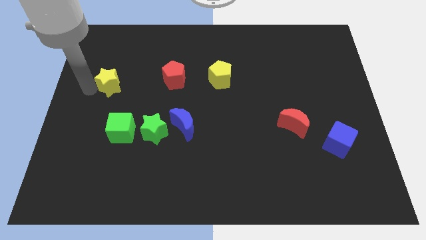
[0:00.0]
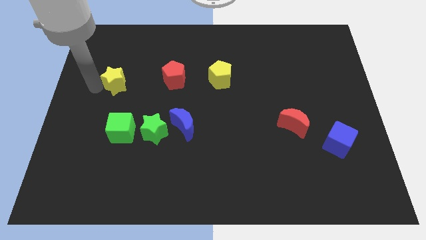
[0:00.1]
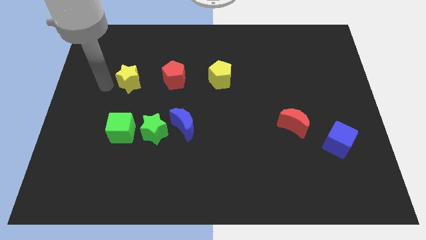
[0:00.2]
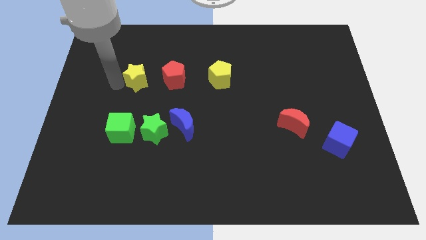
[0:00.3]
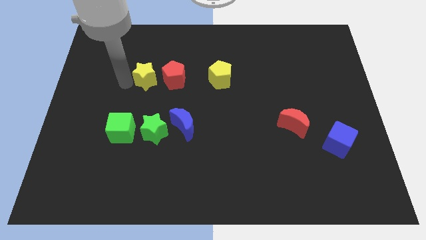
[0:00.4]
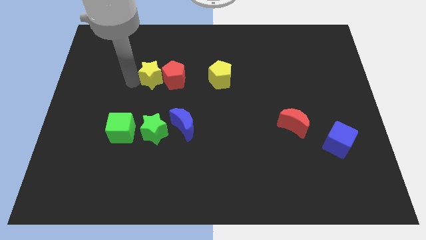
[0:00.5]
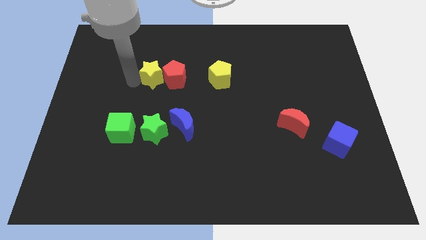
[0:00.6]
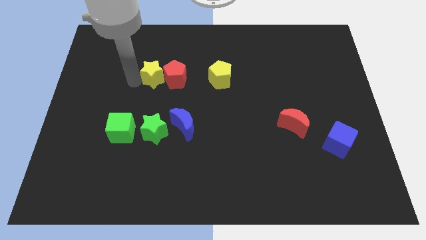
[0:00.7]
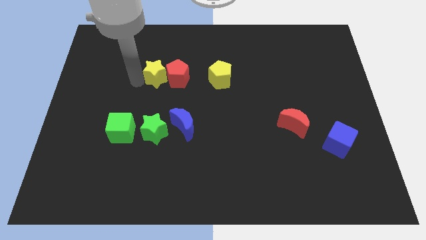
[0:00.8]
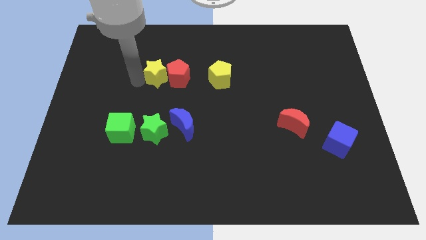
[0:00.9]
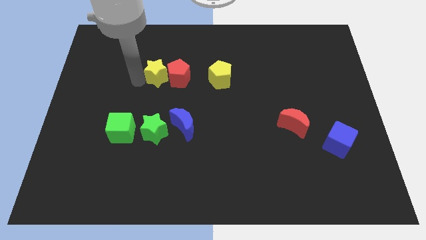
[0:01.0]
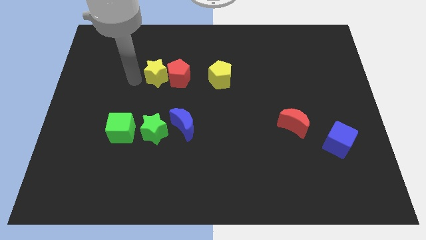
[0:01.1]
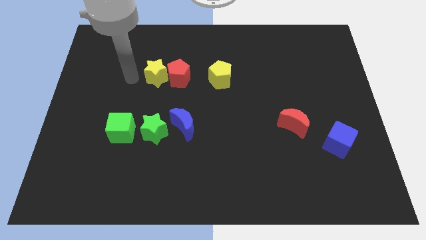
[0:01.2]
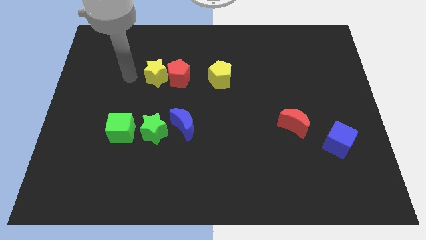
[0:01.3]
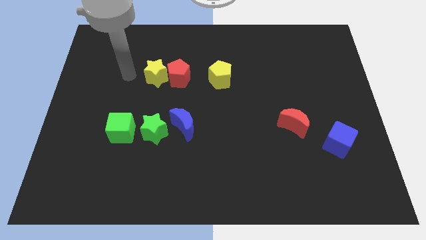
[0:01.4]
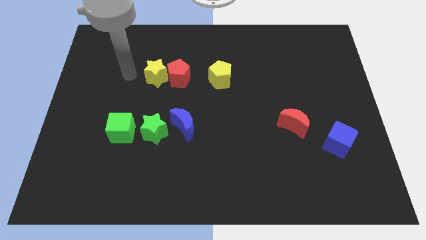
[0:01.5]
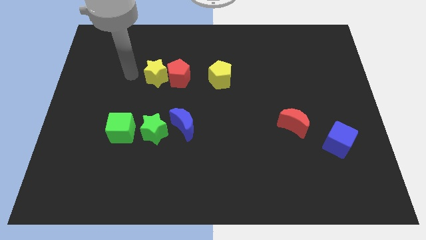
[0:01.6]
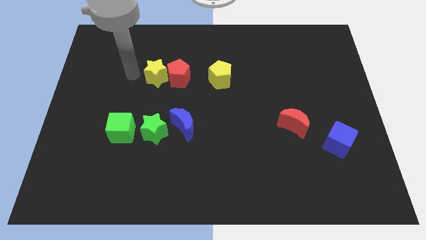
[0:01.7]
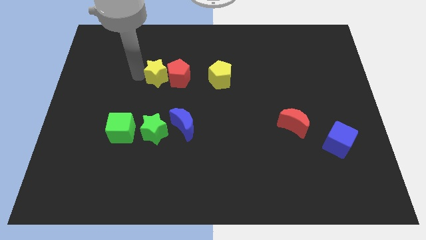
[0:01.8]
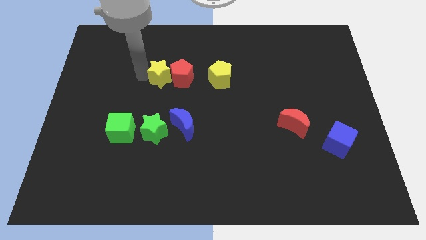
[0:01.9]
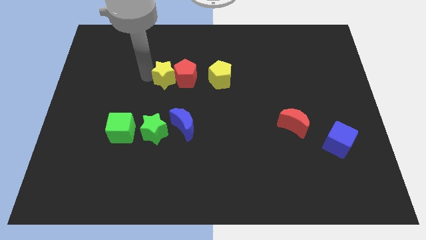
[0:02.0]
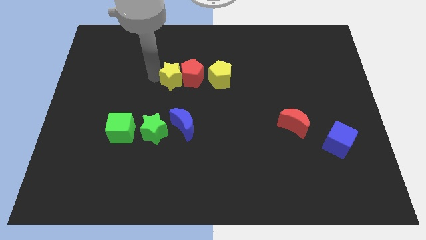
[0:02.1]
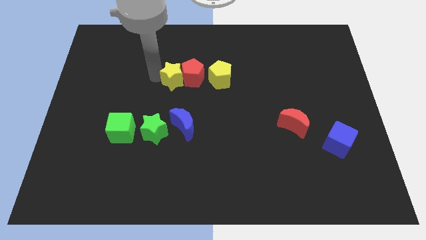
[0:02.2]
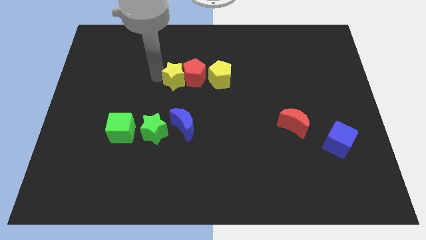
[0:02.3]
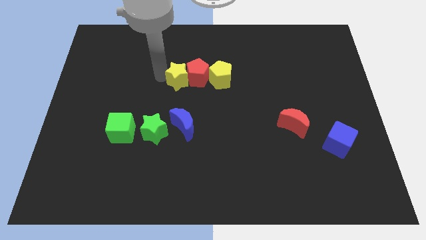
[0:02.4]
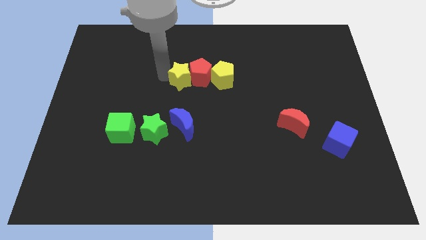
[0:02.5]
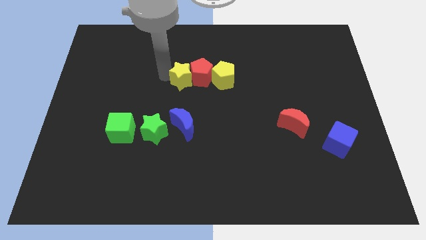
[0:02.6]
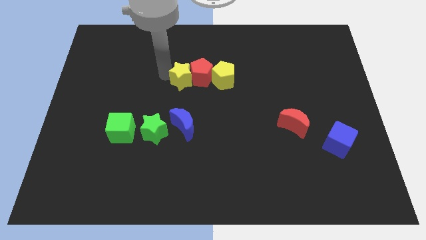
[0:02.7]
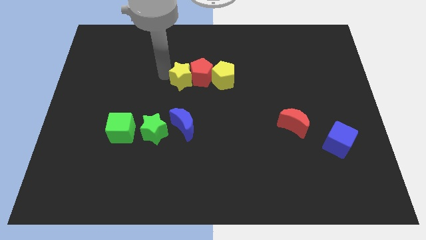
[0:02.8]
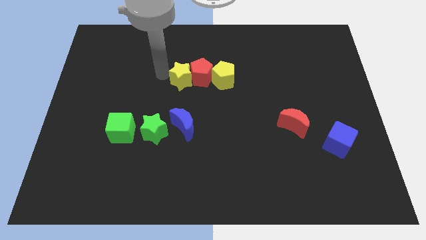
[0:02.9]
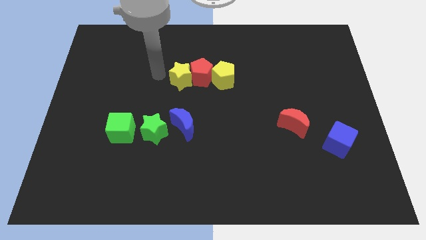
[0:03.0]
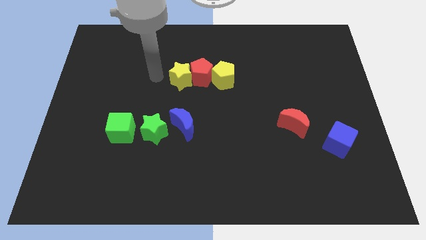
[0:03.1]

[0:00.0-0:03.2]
push the red pentagon towards the center with the help of the yellow star

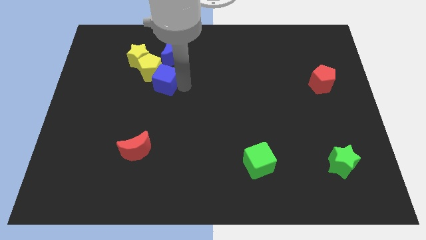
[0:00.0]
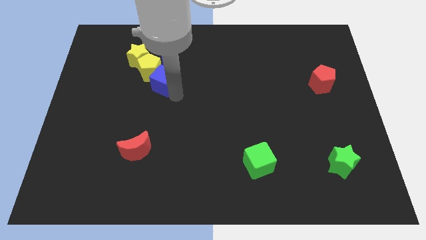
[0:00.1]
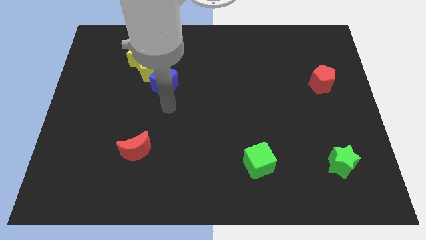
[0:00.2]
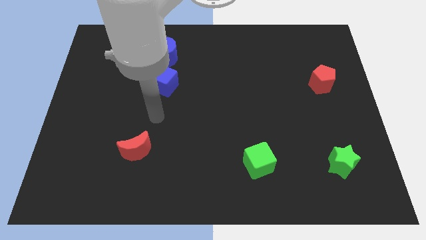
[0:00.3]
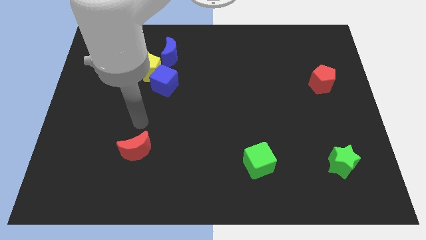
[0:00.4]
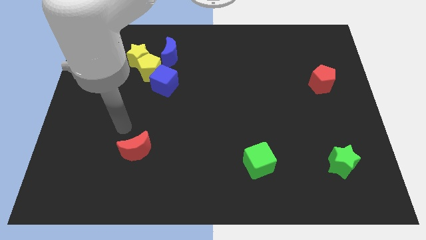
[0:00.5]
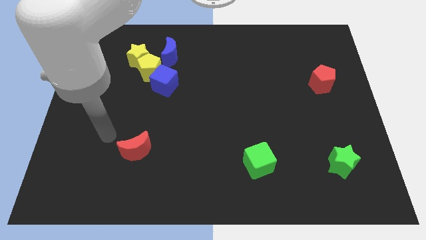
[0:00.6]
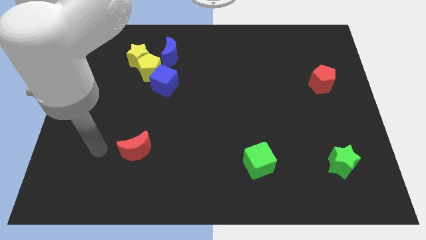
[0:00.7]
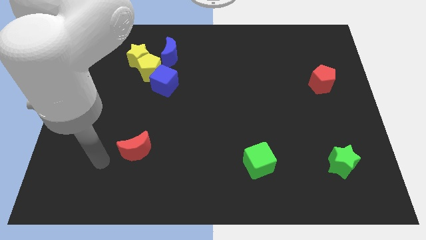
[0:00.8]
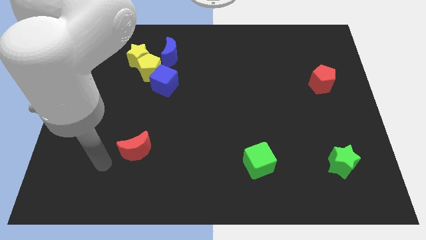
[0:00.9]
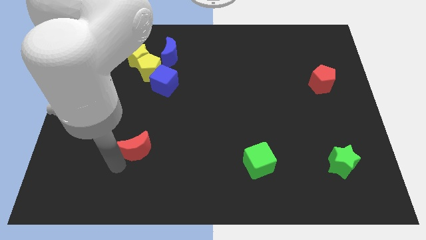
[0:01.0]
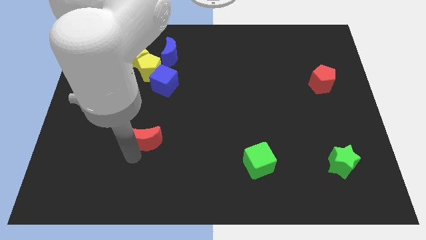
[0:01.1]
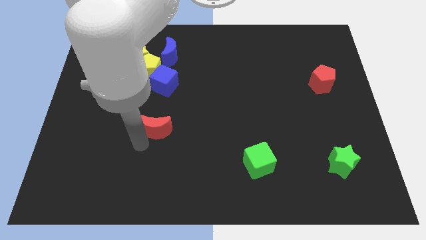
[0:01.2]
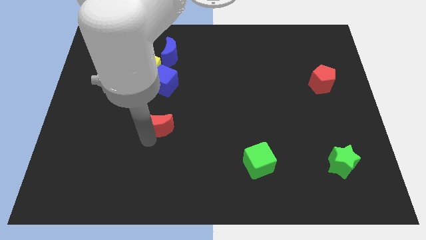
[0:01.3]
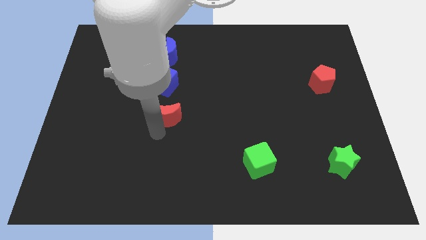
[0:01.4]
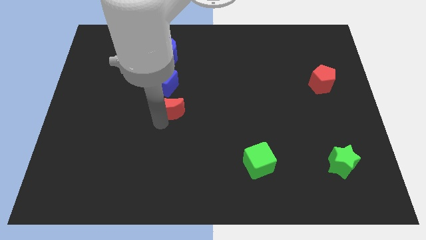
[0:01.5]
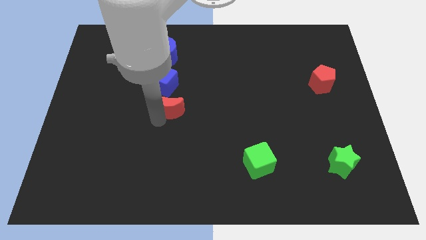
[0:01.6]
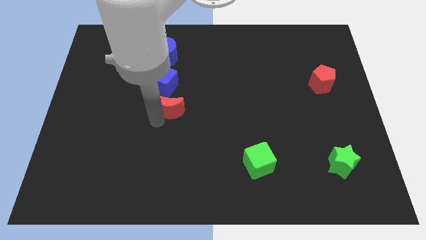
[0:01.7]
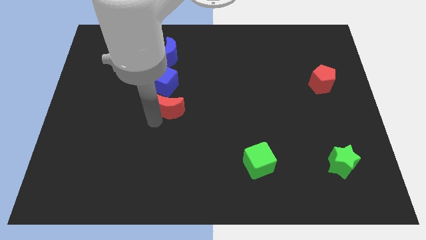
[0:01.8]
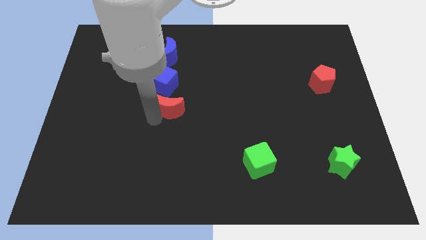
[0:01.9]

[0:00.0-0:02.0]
move the red crescent towards top center

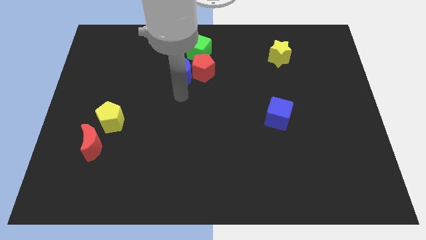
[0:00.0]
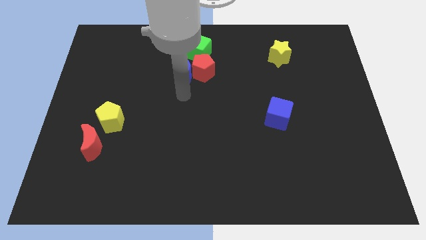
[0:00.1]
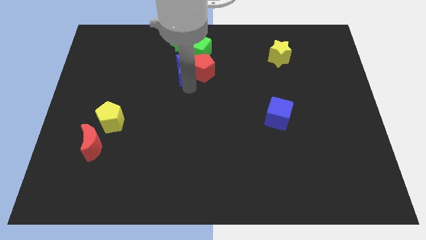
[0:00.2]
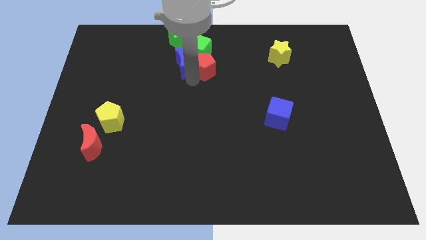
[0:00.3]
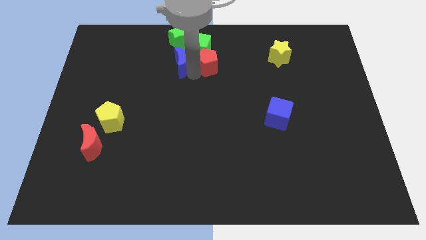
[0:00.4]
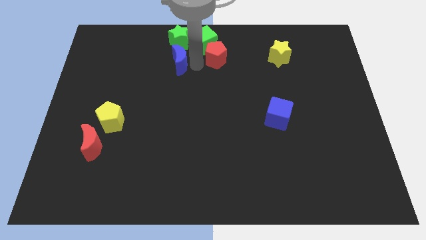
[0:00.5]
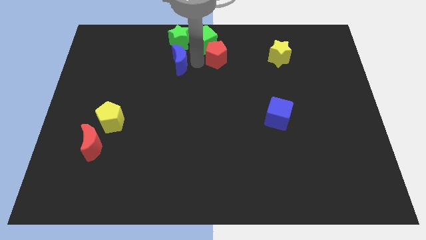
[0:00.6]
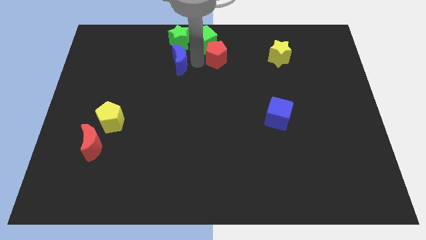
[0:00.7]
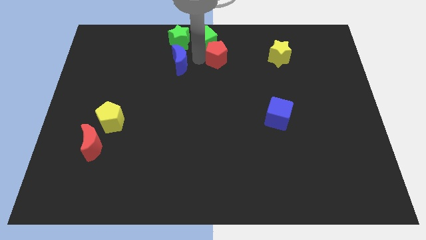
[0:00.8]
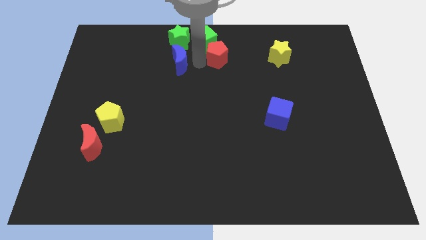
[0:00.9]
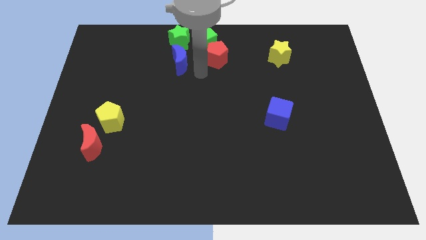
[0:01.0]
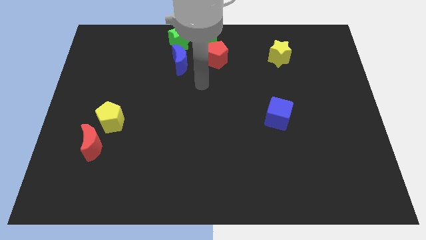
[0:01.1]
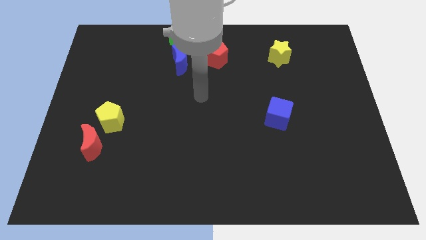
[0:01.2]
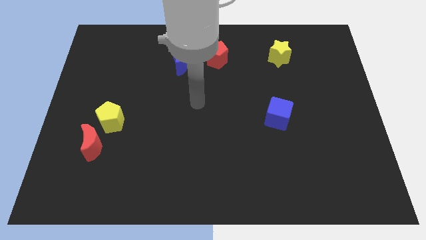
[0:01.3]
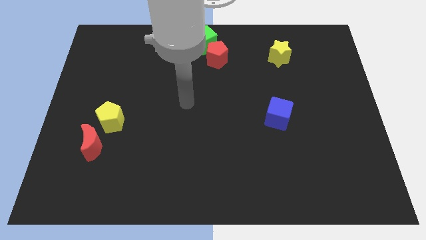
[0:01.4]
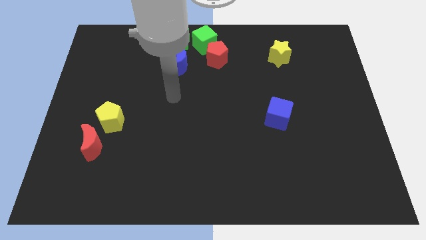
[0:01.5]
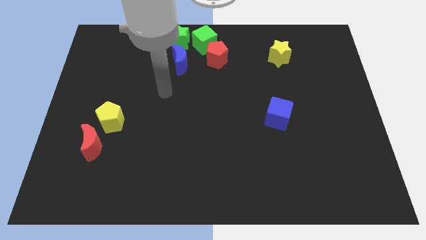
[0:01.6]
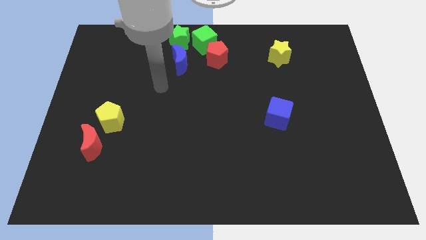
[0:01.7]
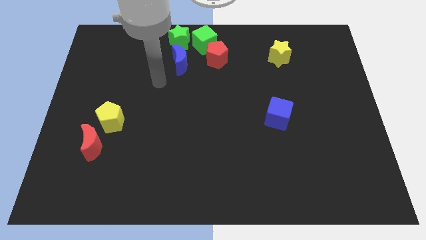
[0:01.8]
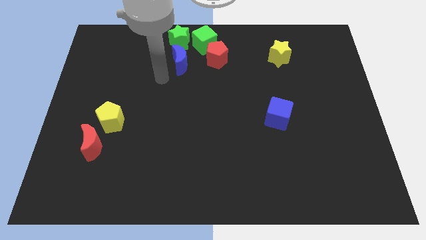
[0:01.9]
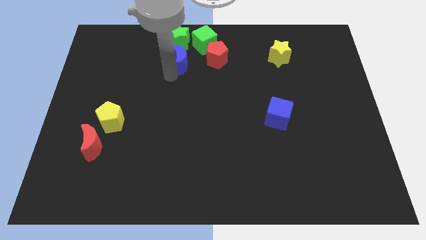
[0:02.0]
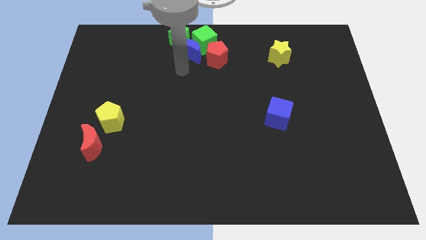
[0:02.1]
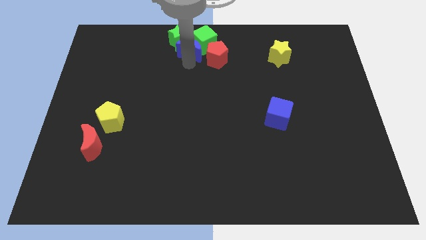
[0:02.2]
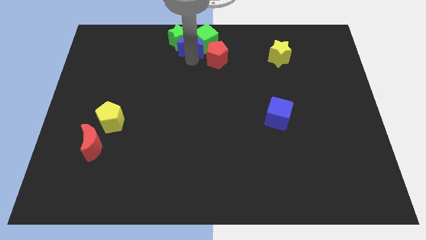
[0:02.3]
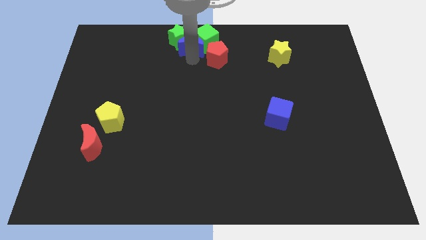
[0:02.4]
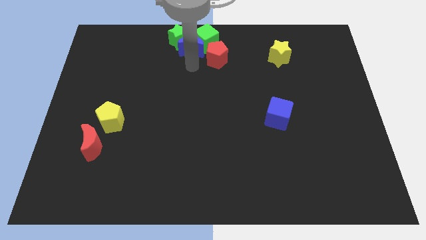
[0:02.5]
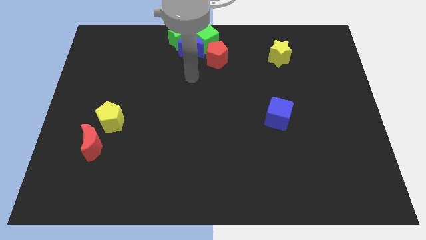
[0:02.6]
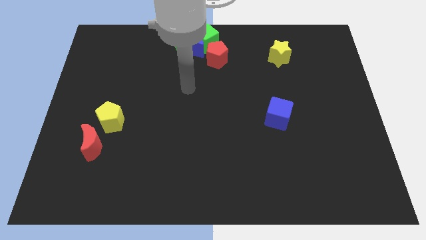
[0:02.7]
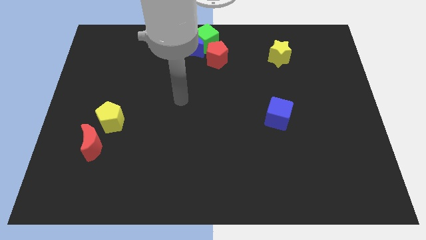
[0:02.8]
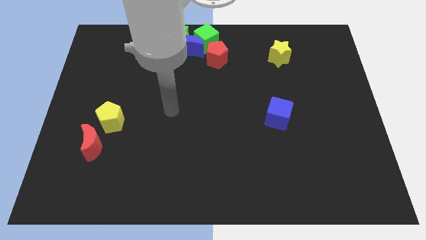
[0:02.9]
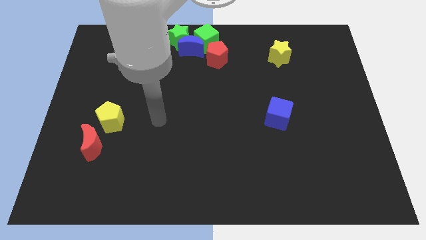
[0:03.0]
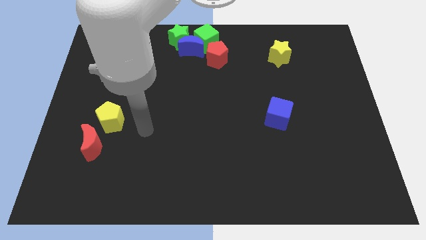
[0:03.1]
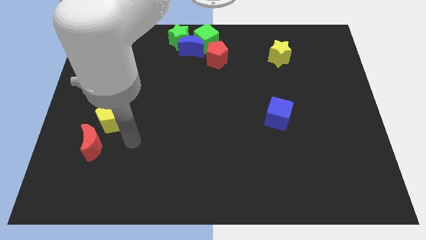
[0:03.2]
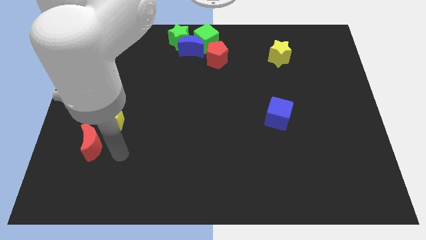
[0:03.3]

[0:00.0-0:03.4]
move both green blocks blue crescent and red pentagon to the top center of the board

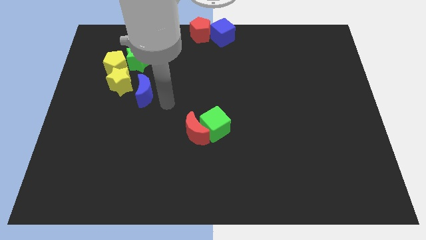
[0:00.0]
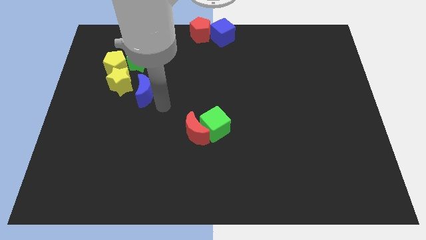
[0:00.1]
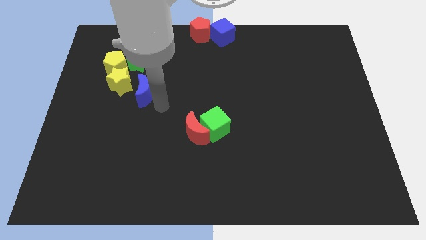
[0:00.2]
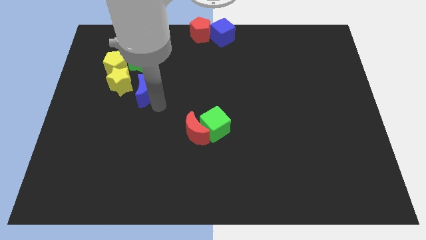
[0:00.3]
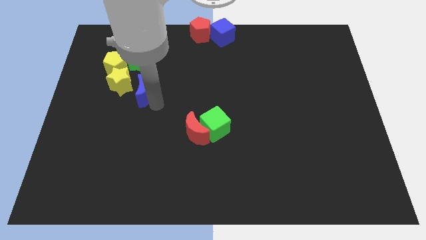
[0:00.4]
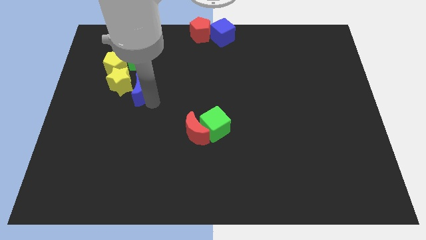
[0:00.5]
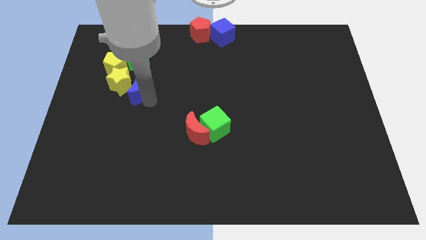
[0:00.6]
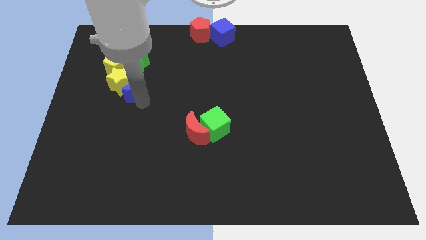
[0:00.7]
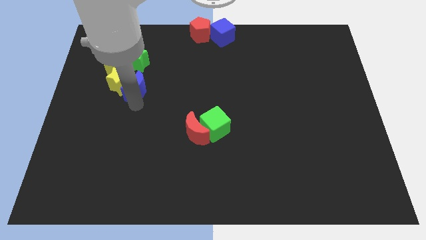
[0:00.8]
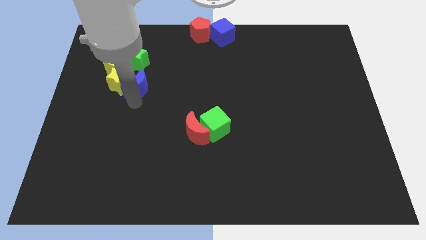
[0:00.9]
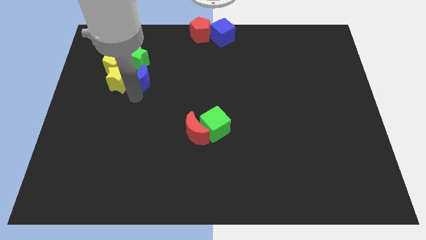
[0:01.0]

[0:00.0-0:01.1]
move the blue moon into the yellow star
